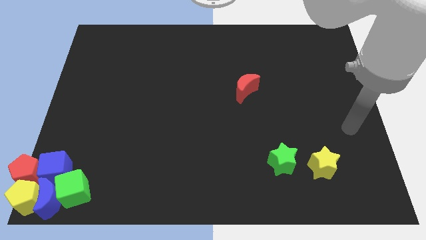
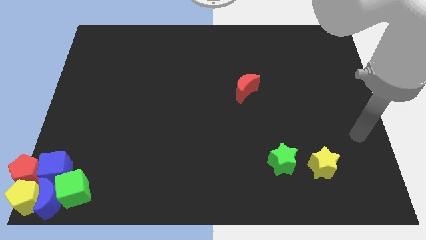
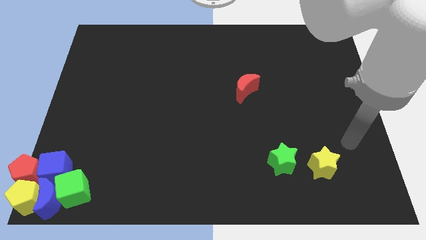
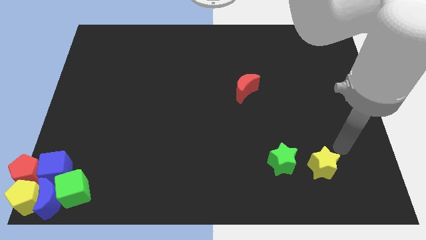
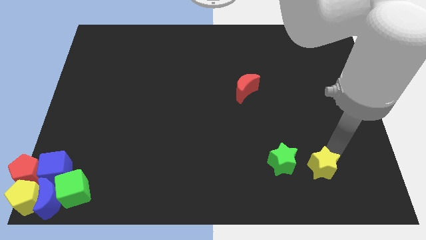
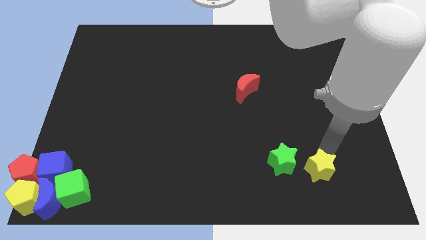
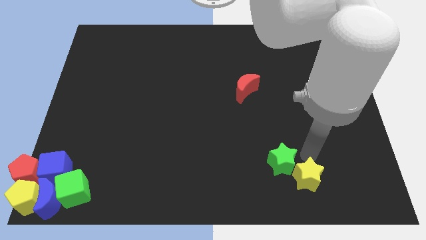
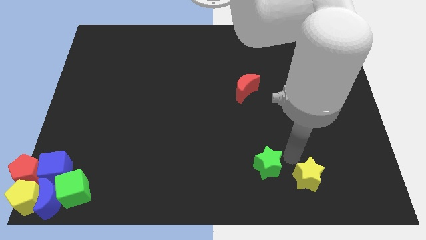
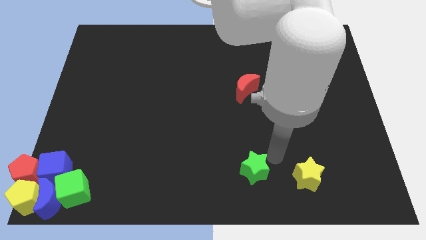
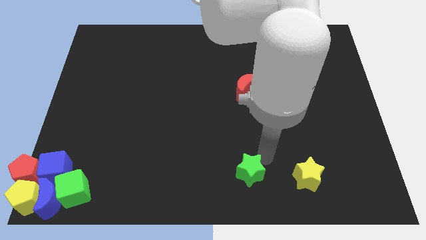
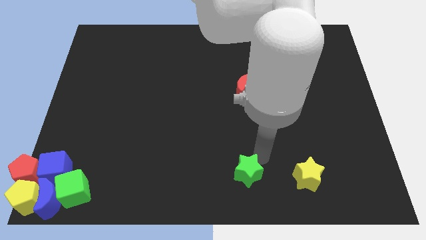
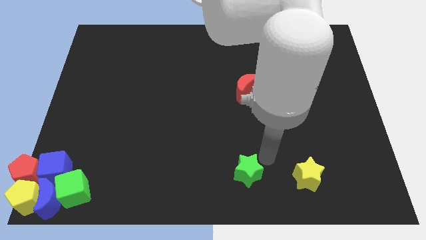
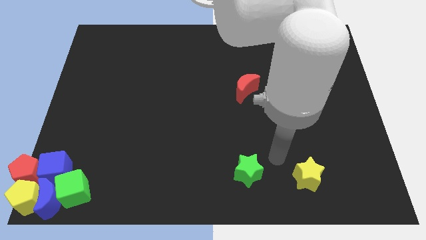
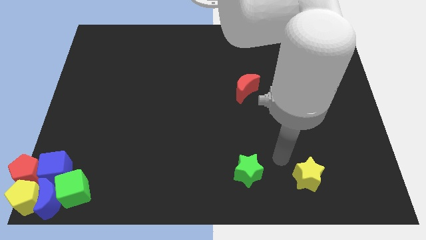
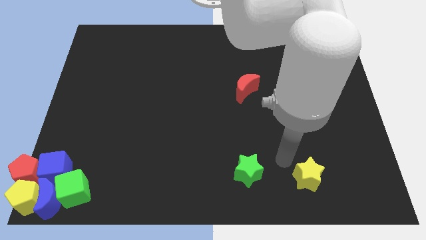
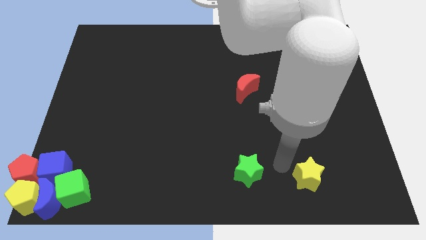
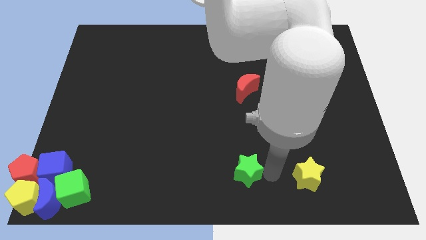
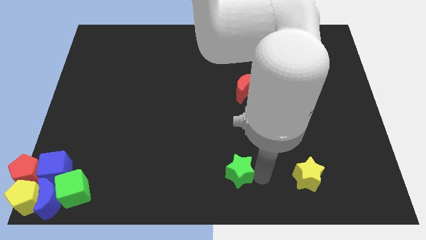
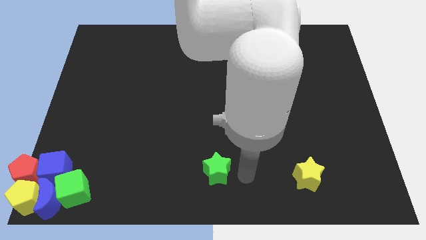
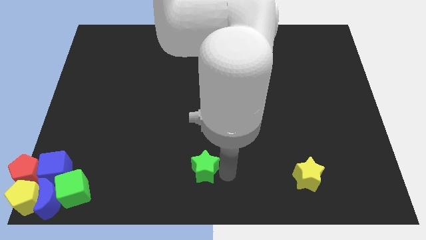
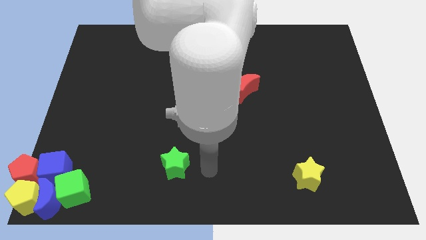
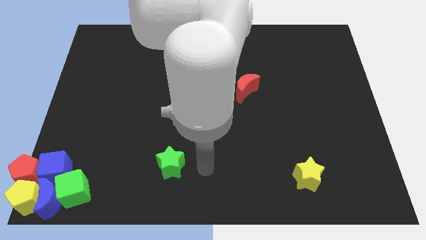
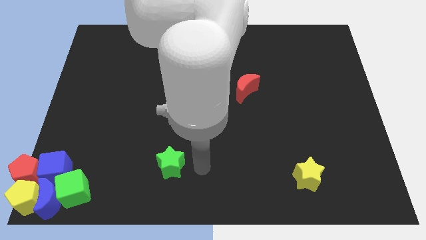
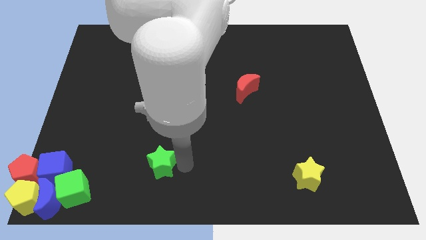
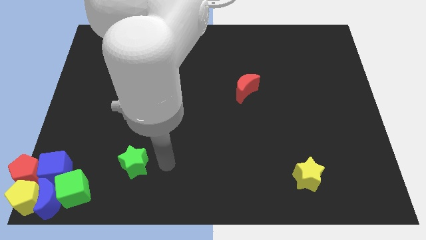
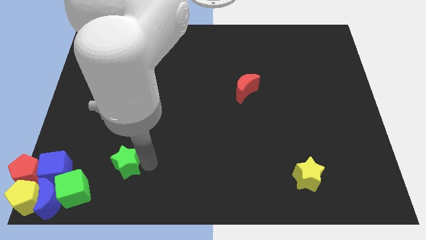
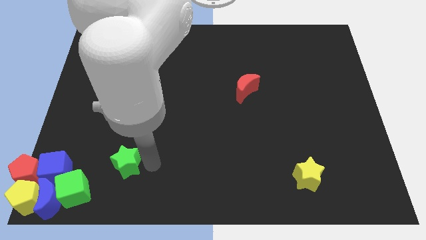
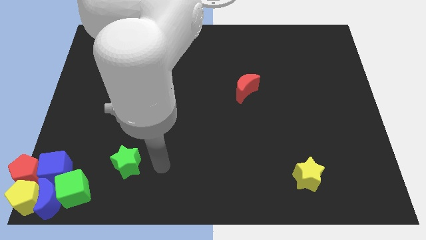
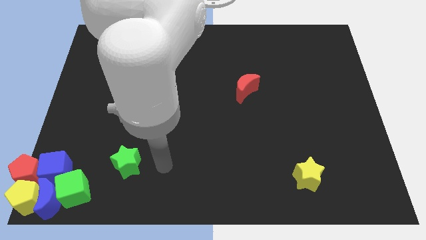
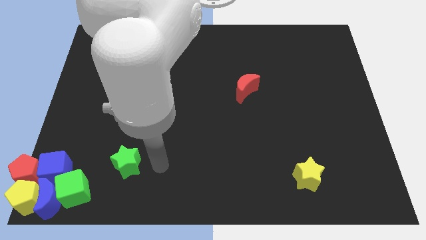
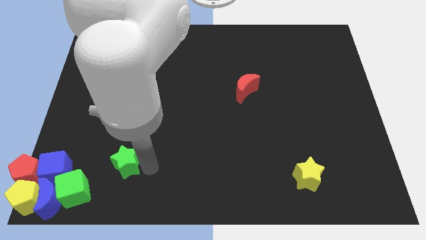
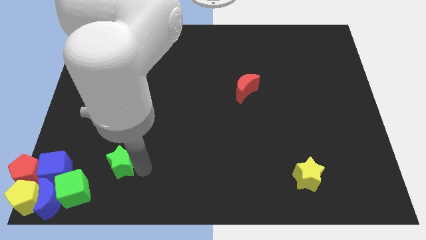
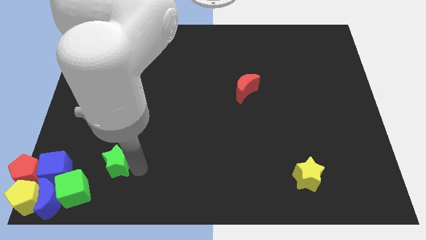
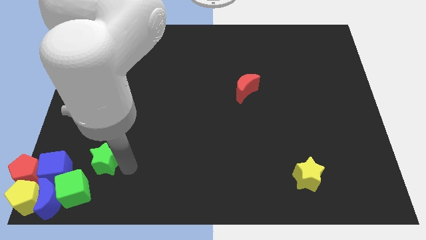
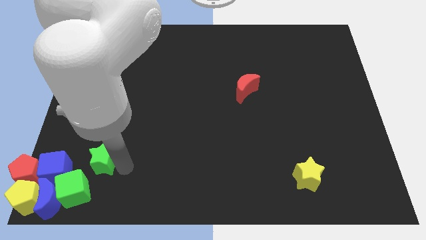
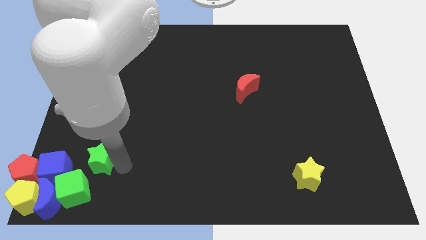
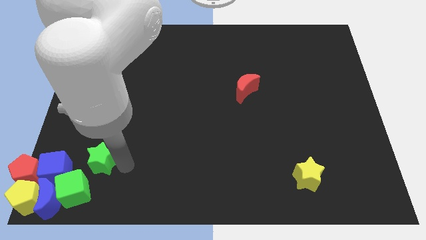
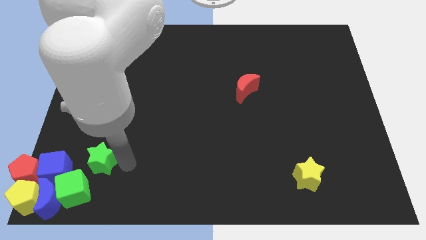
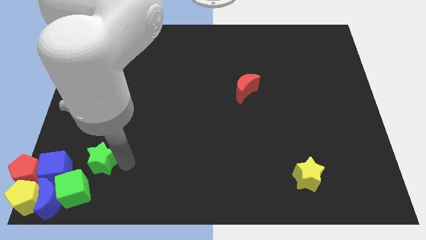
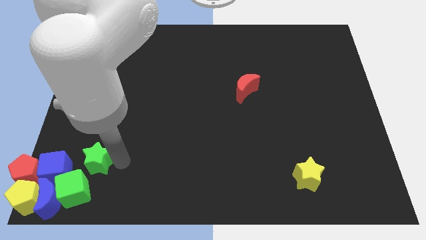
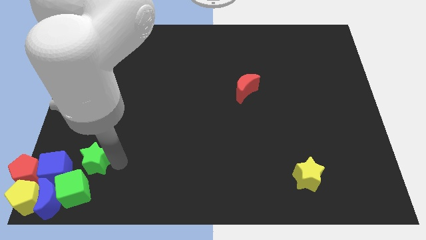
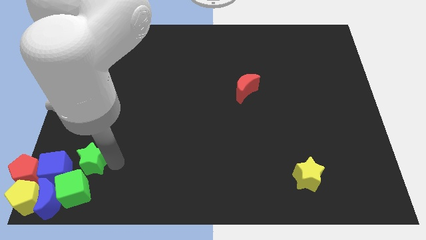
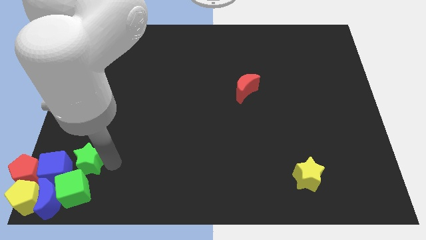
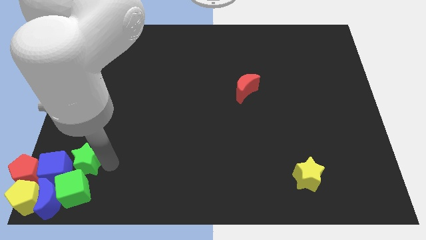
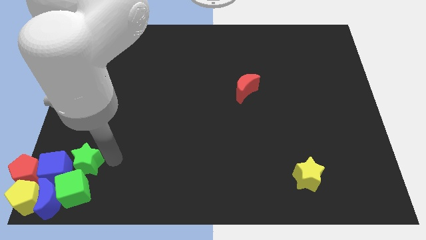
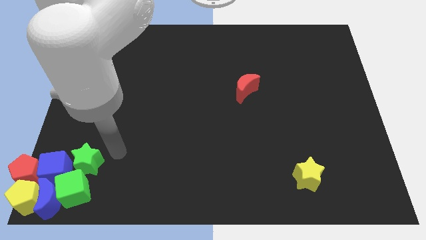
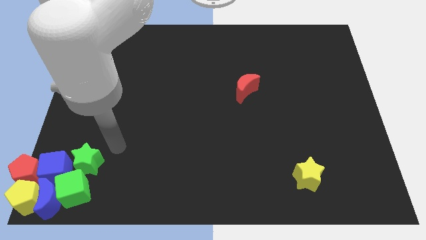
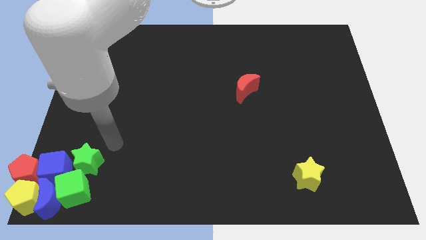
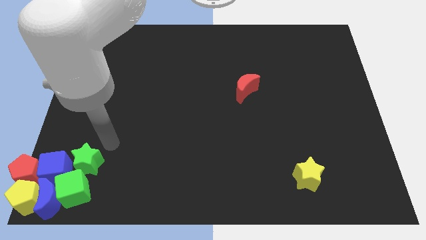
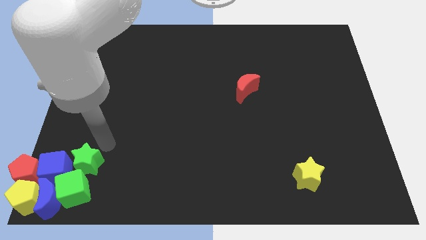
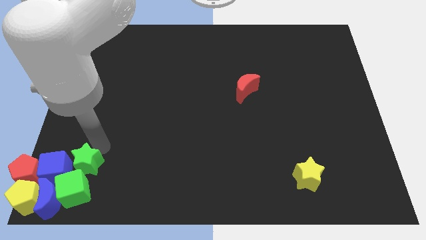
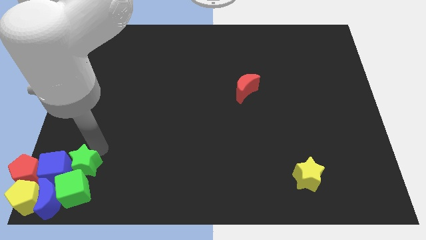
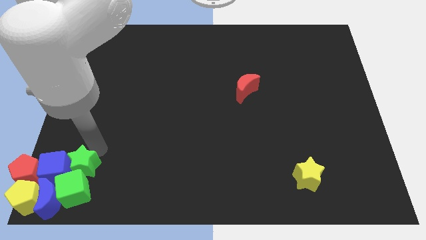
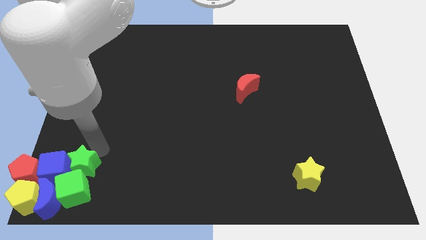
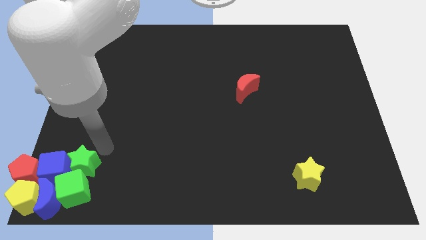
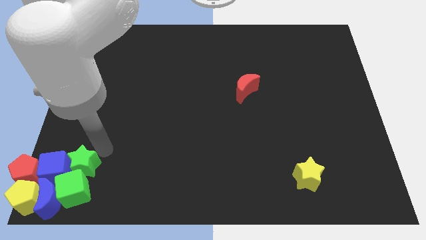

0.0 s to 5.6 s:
move green star into blue cube

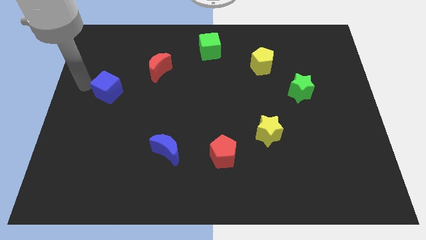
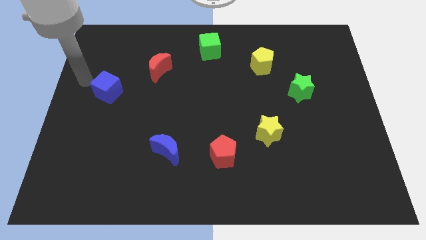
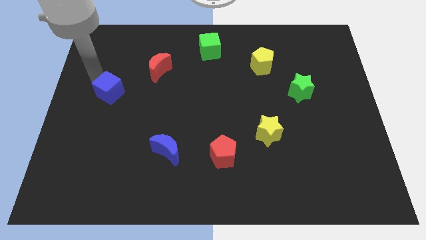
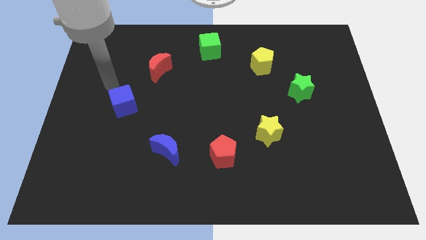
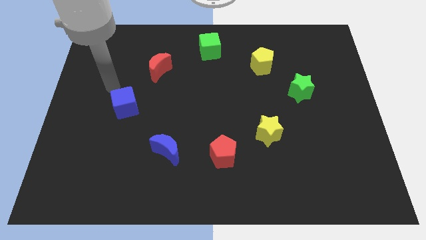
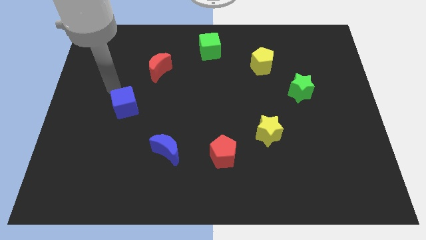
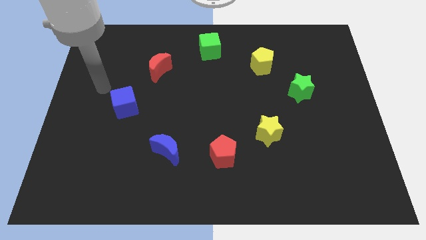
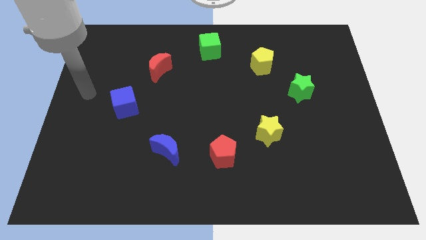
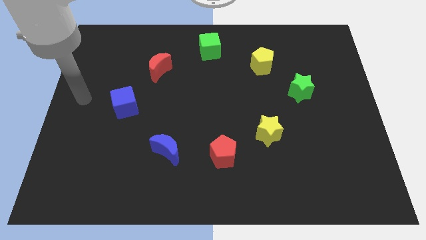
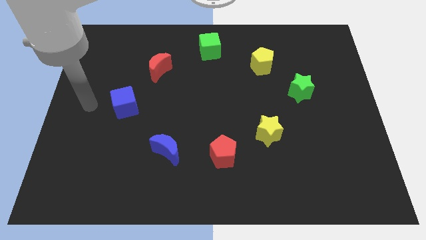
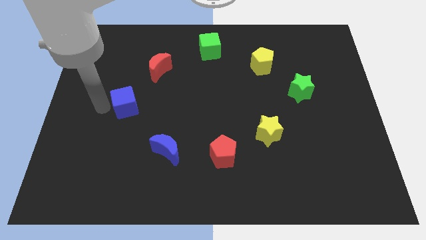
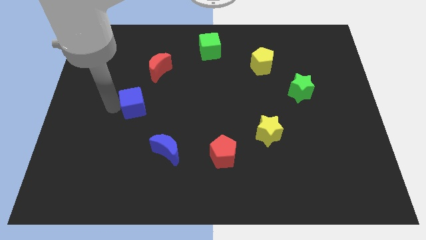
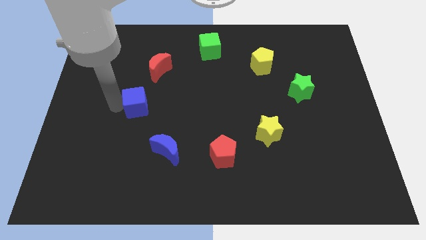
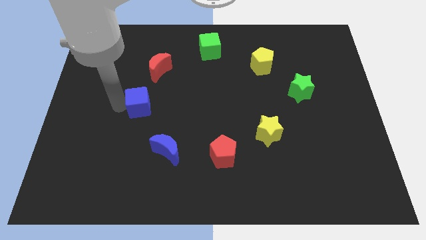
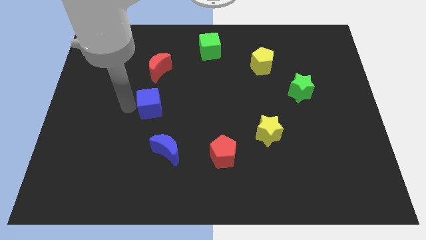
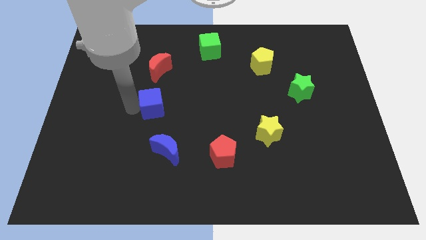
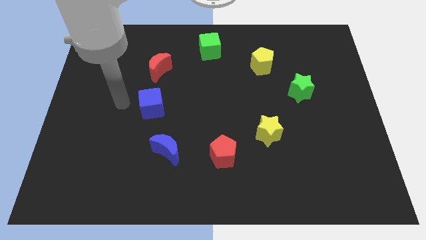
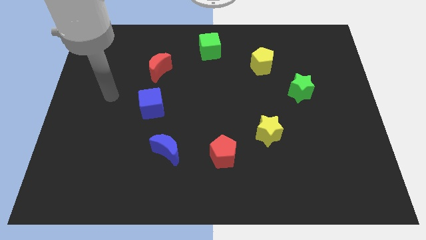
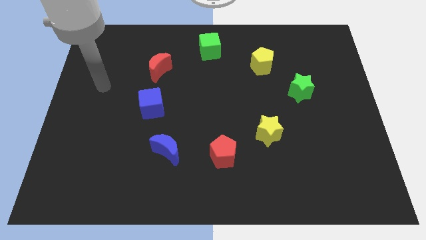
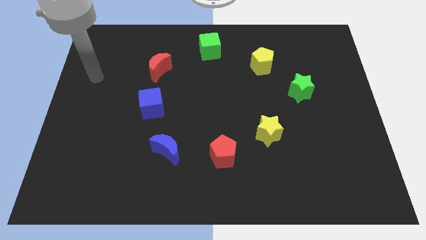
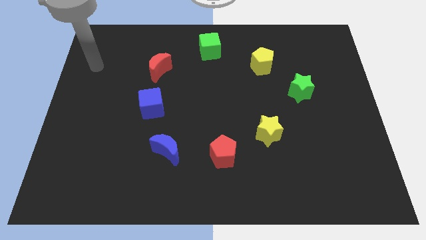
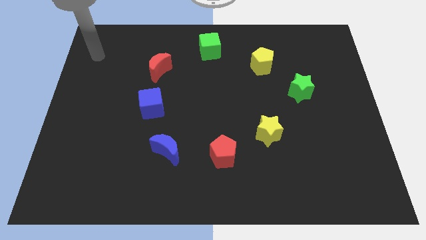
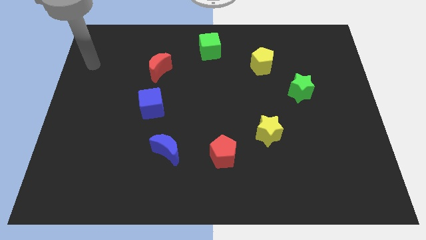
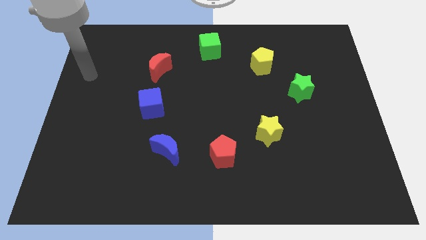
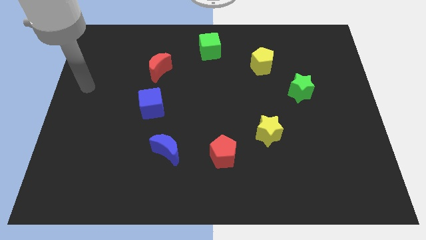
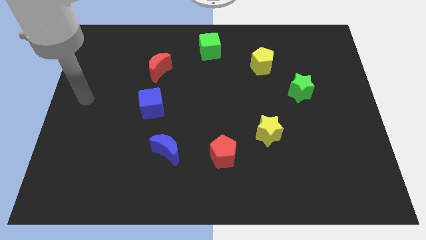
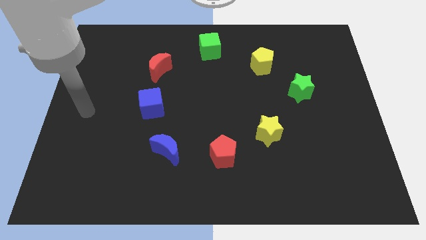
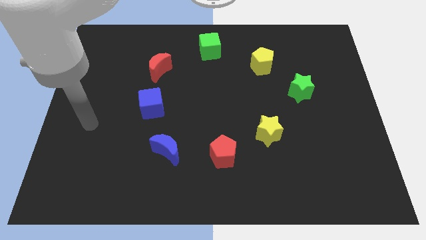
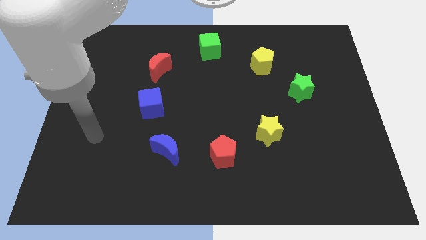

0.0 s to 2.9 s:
place the blue cube below the red crescent

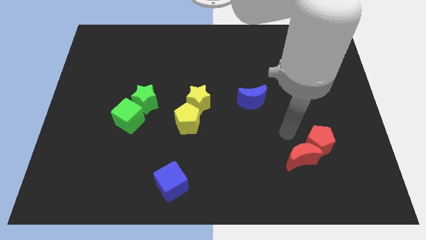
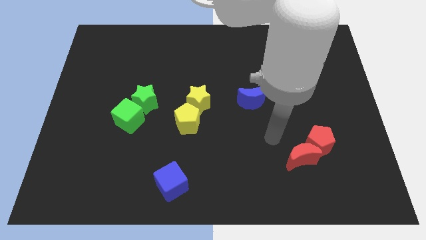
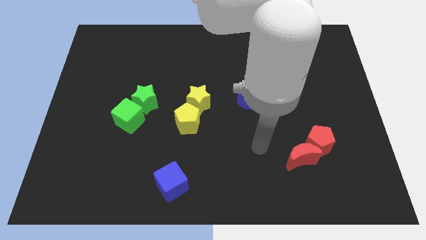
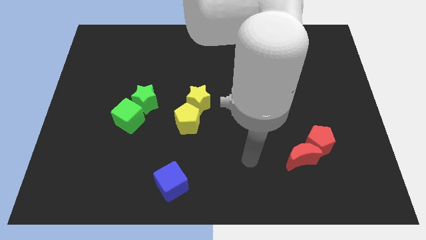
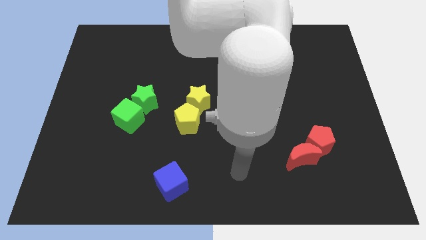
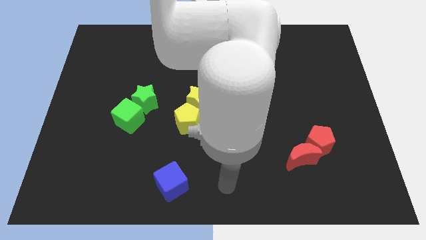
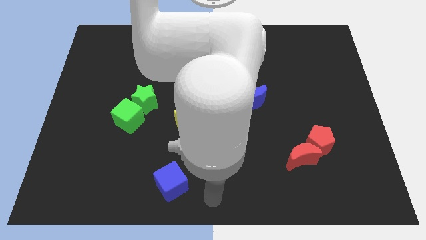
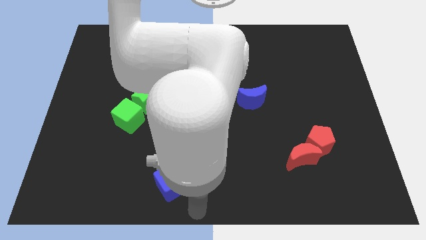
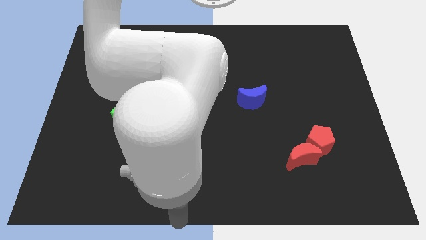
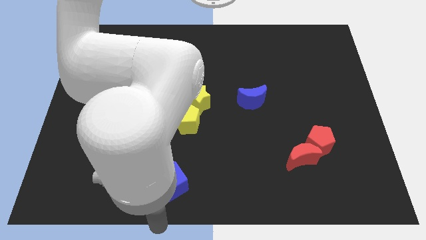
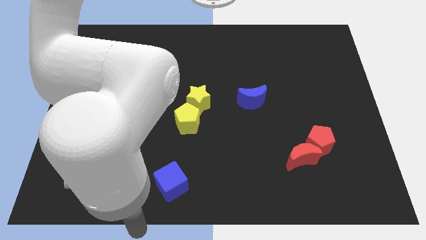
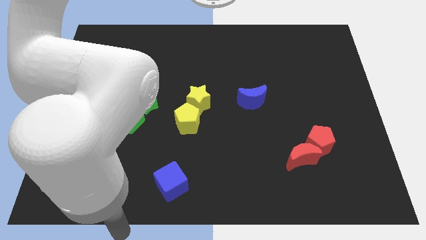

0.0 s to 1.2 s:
move your arm to the bottom of the board
